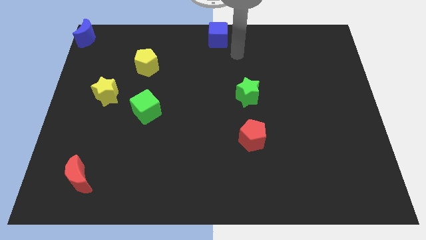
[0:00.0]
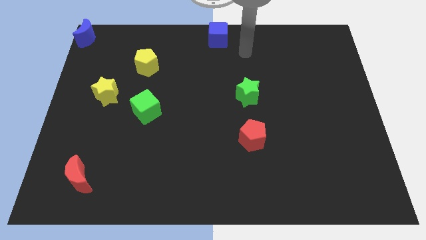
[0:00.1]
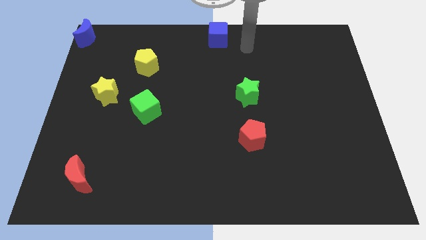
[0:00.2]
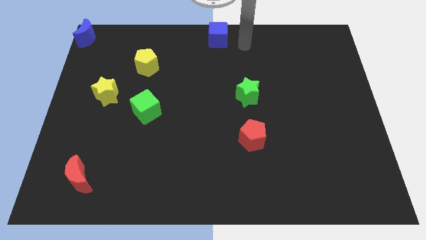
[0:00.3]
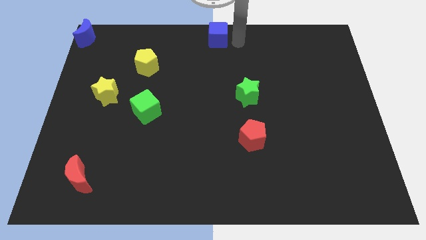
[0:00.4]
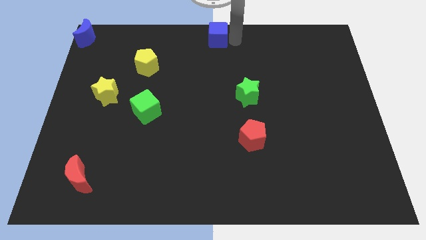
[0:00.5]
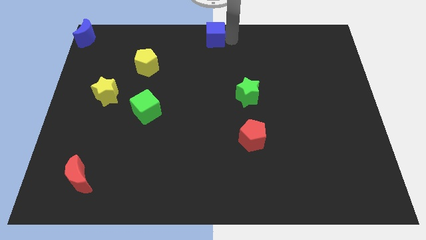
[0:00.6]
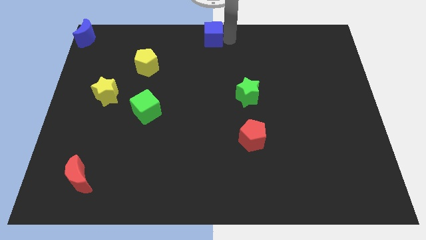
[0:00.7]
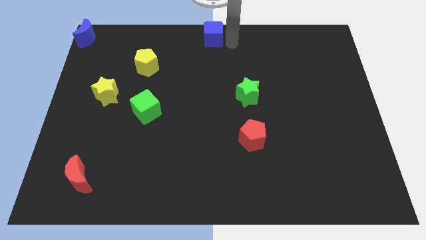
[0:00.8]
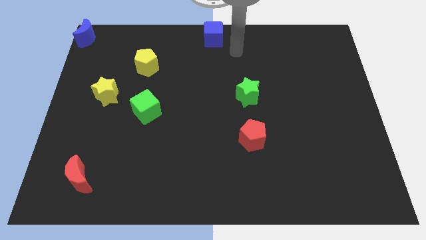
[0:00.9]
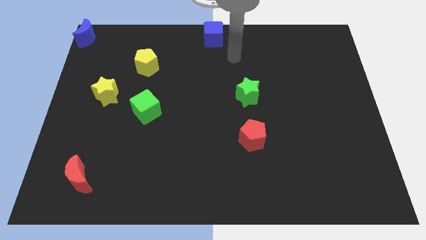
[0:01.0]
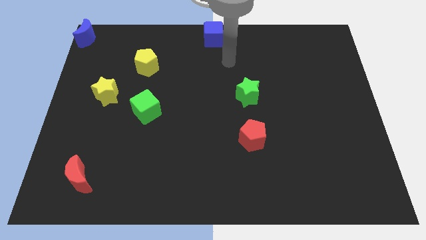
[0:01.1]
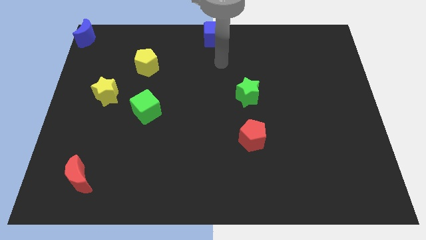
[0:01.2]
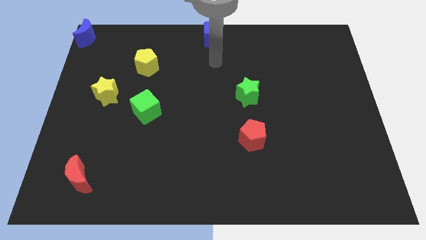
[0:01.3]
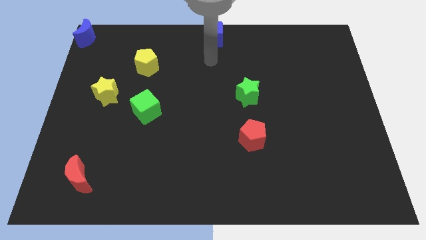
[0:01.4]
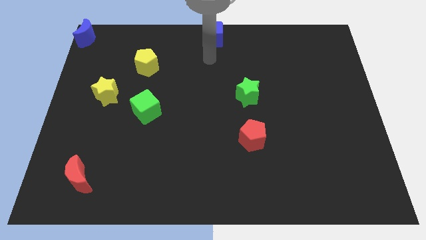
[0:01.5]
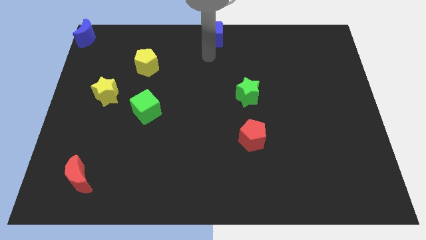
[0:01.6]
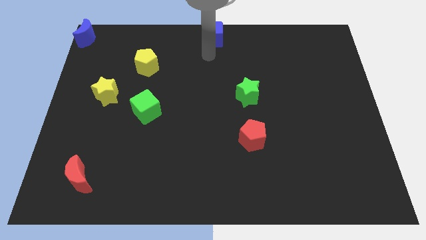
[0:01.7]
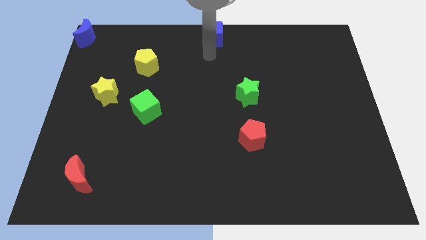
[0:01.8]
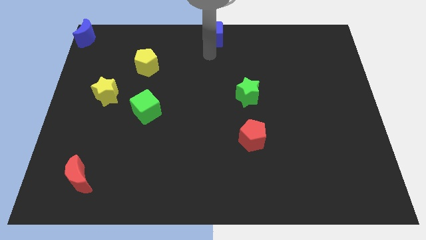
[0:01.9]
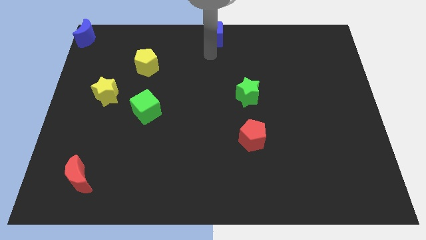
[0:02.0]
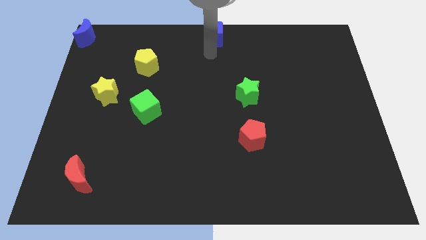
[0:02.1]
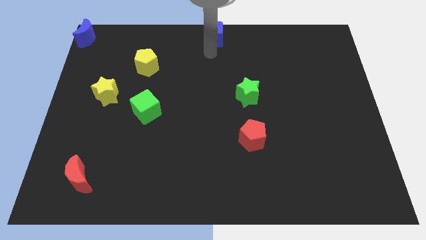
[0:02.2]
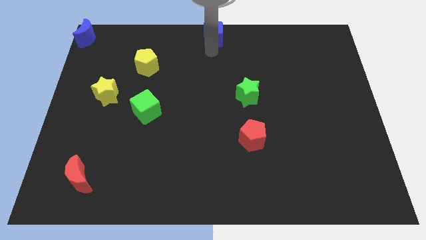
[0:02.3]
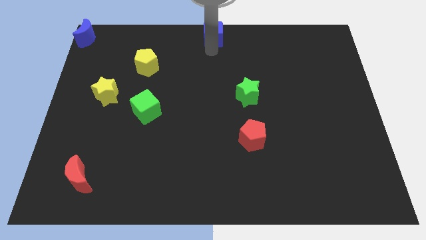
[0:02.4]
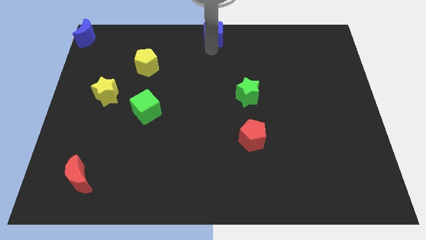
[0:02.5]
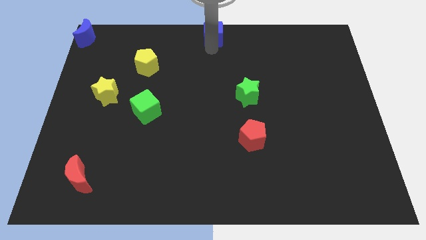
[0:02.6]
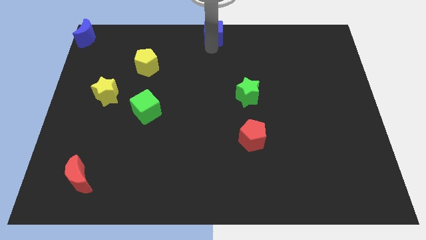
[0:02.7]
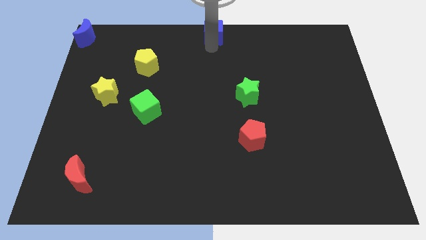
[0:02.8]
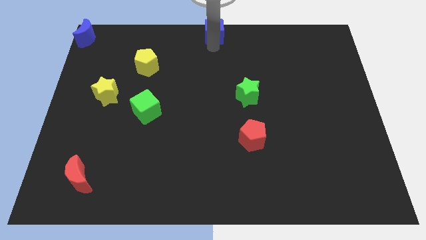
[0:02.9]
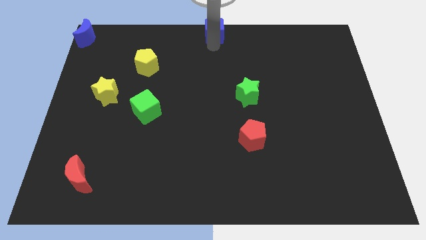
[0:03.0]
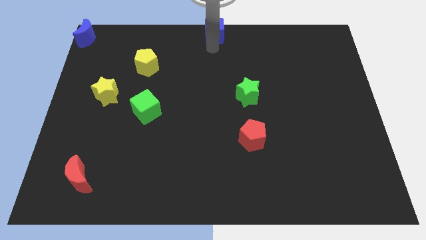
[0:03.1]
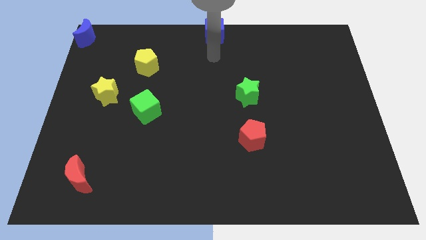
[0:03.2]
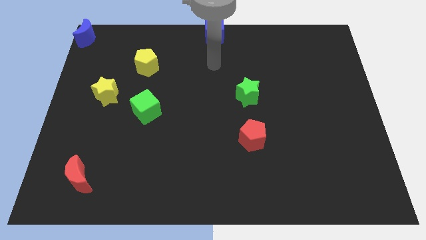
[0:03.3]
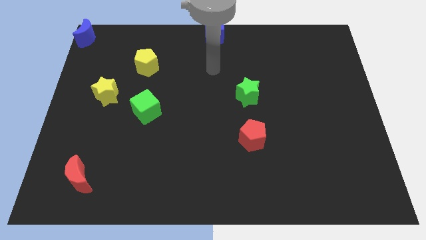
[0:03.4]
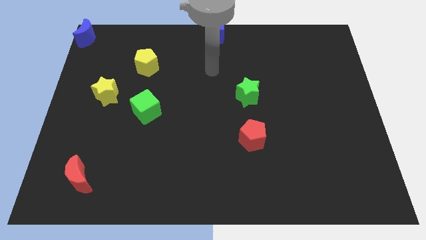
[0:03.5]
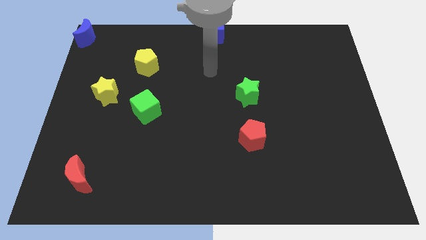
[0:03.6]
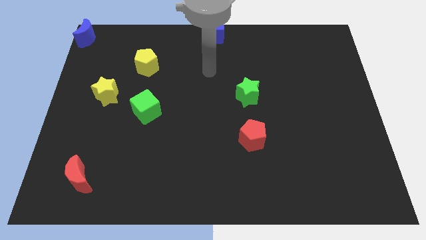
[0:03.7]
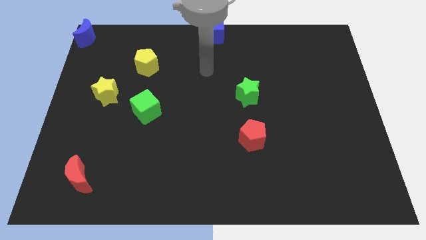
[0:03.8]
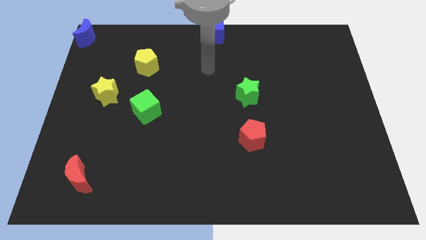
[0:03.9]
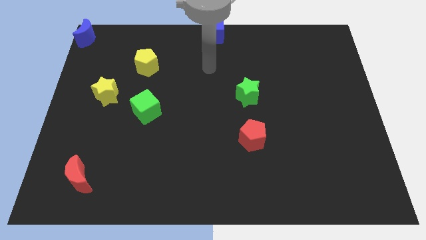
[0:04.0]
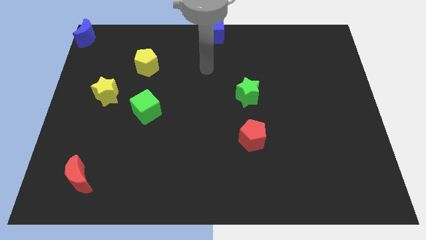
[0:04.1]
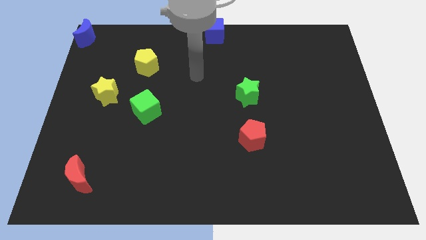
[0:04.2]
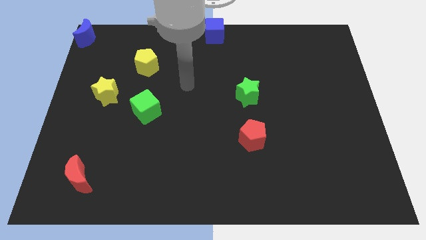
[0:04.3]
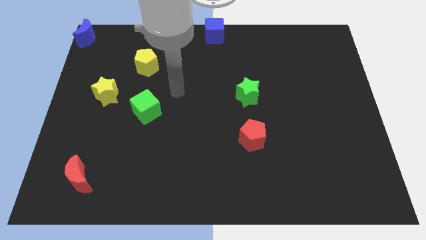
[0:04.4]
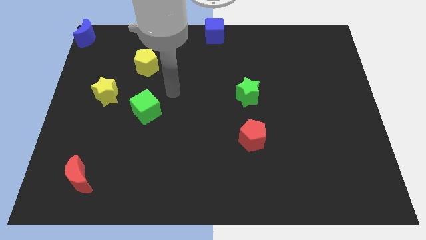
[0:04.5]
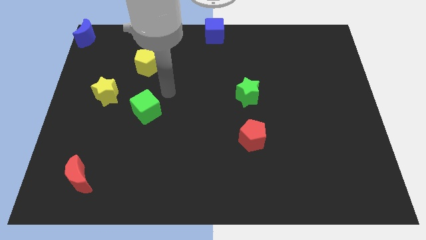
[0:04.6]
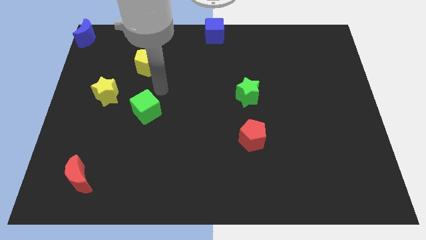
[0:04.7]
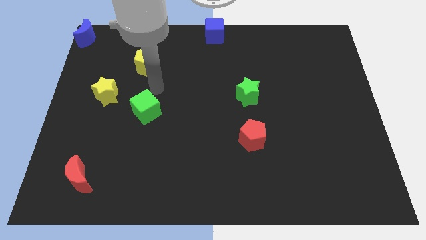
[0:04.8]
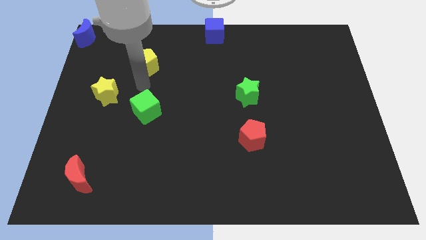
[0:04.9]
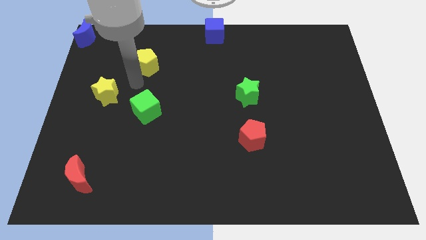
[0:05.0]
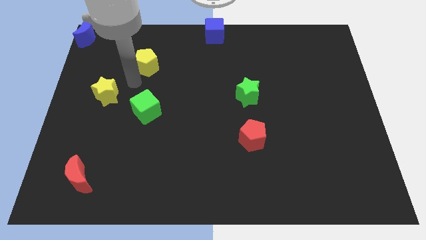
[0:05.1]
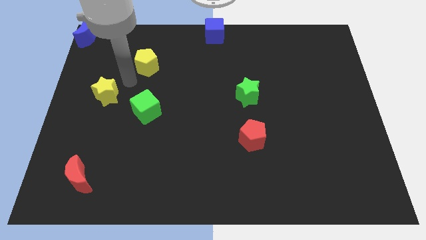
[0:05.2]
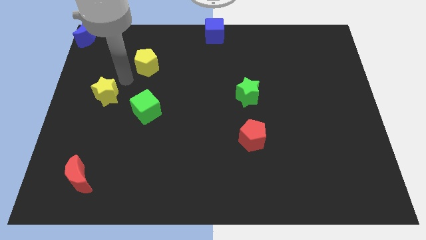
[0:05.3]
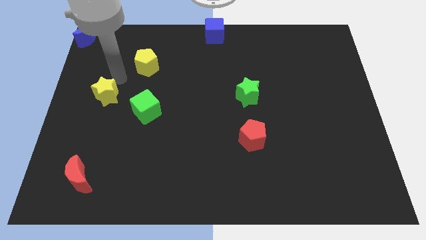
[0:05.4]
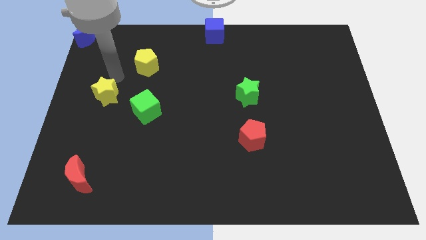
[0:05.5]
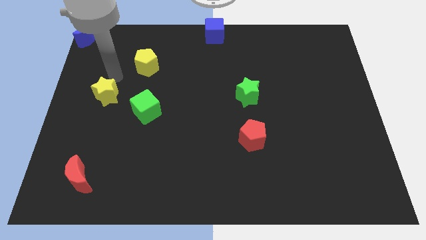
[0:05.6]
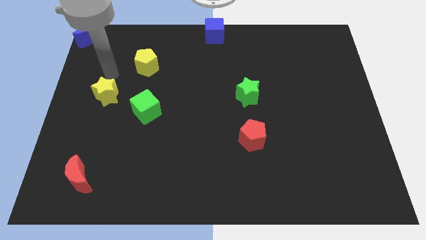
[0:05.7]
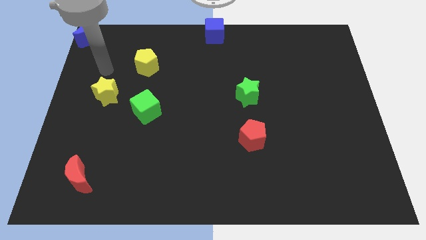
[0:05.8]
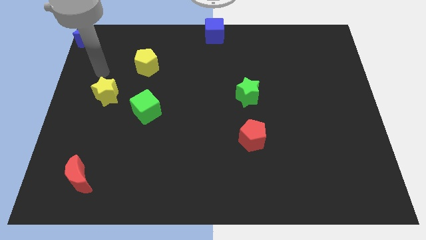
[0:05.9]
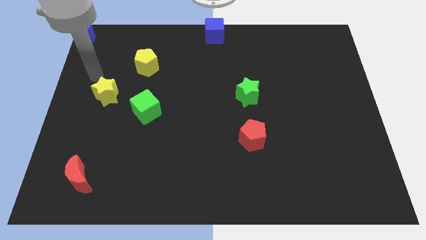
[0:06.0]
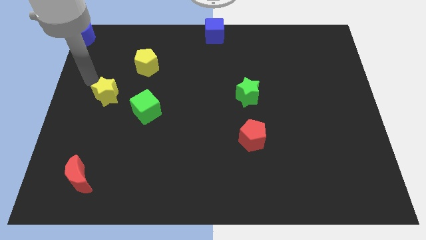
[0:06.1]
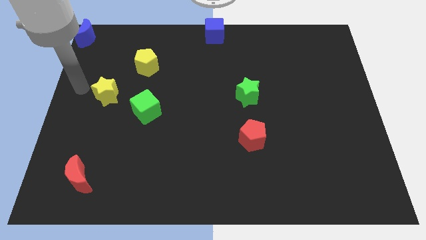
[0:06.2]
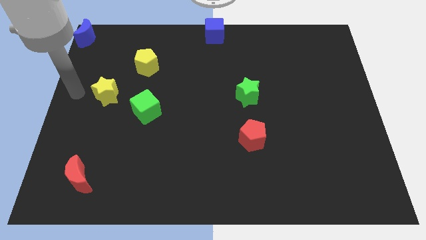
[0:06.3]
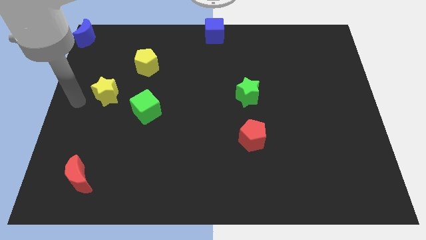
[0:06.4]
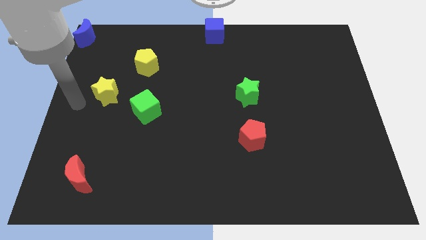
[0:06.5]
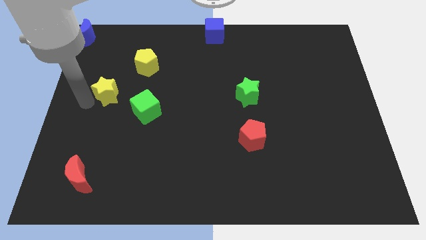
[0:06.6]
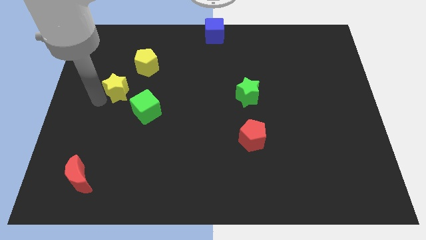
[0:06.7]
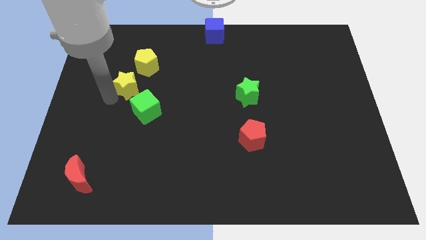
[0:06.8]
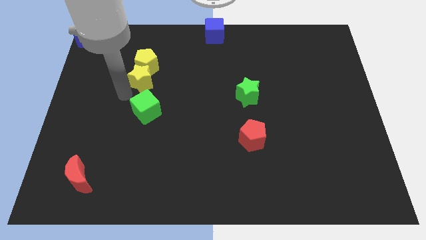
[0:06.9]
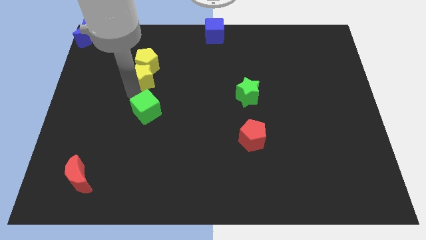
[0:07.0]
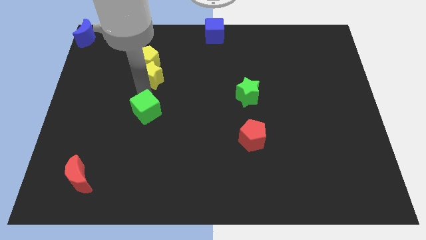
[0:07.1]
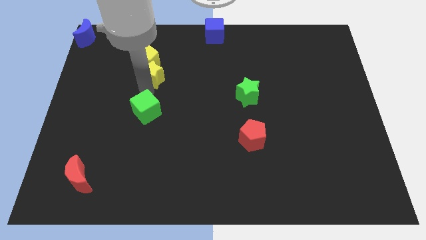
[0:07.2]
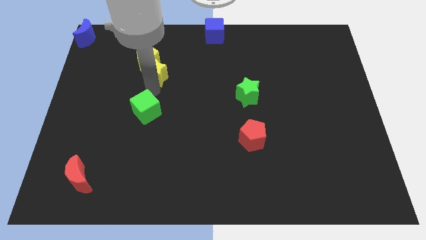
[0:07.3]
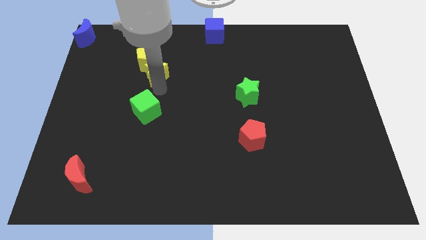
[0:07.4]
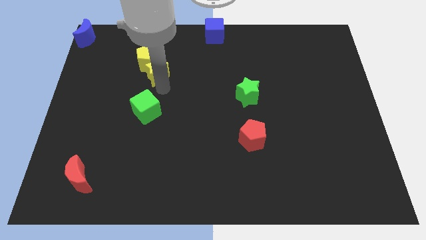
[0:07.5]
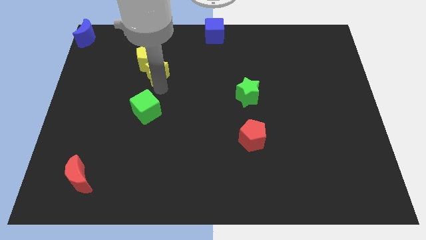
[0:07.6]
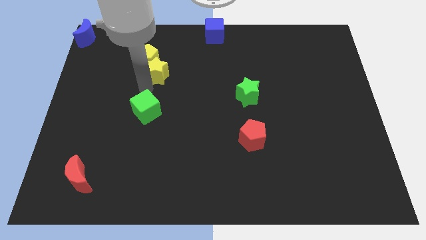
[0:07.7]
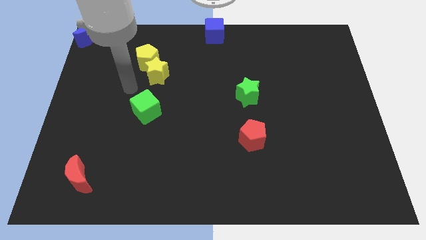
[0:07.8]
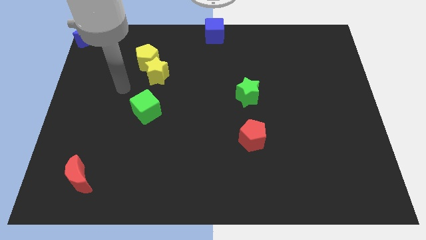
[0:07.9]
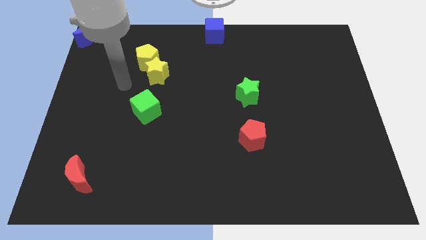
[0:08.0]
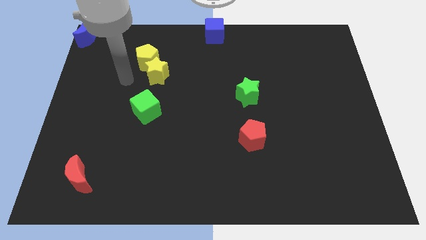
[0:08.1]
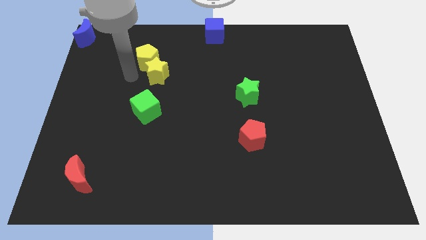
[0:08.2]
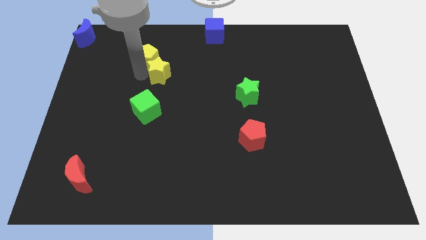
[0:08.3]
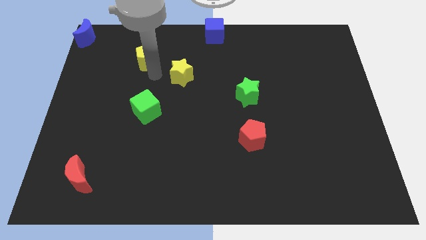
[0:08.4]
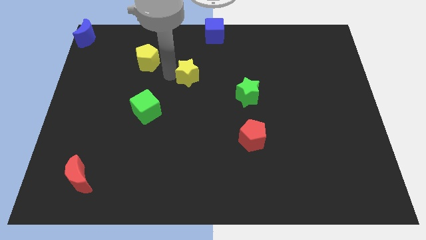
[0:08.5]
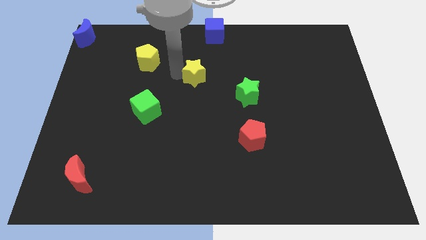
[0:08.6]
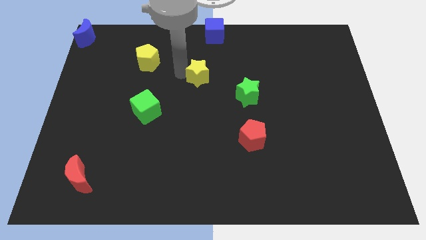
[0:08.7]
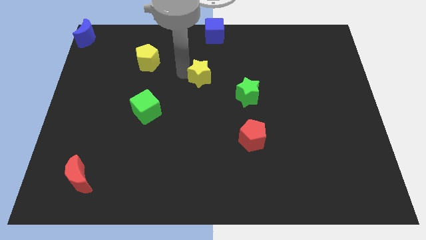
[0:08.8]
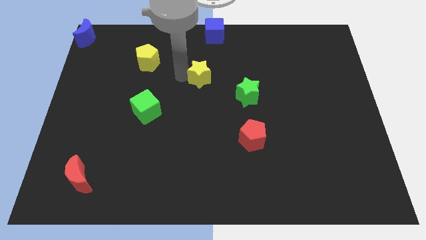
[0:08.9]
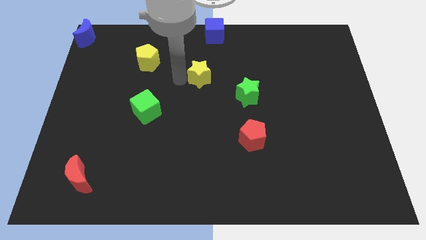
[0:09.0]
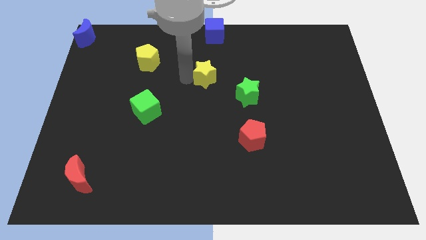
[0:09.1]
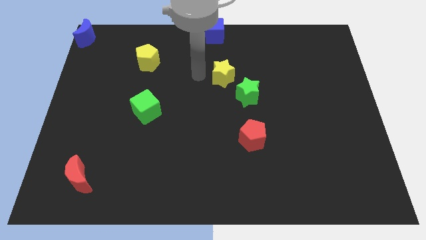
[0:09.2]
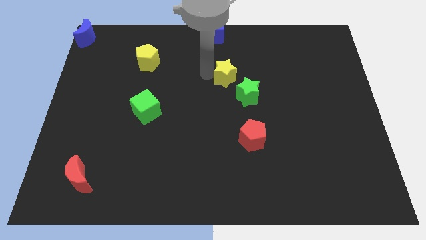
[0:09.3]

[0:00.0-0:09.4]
move the yellow star diagonally above green star
